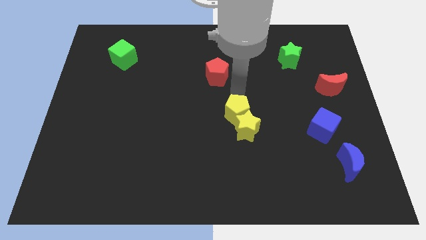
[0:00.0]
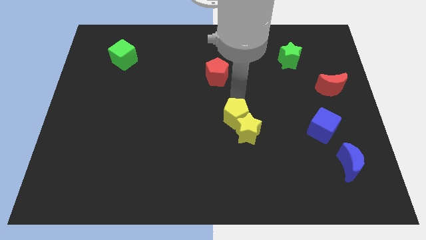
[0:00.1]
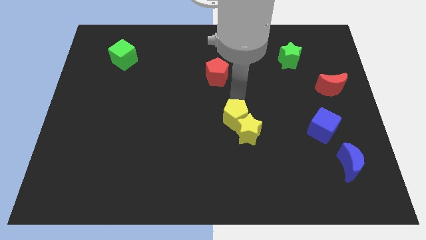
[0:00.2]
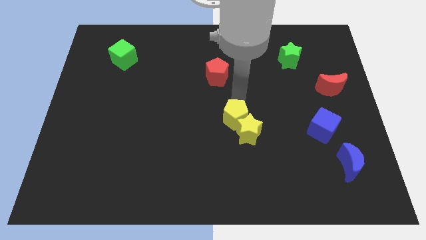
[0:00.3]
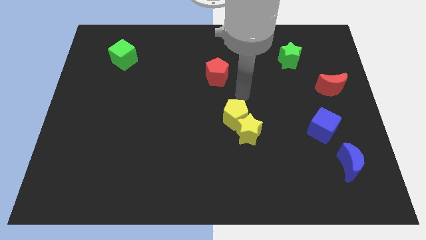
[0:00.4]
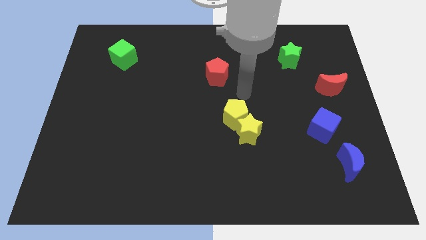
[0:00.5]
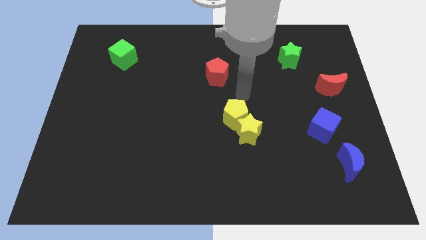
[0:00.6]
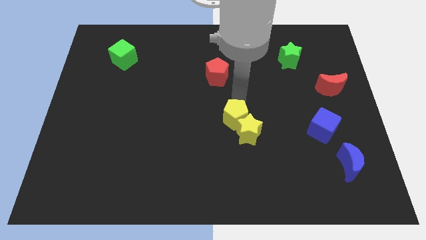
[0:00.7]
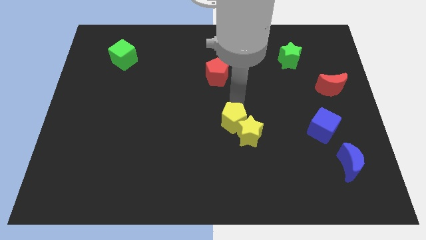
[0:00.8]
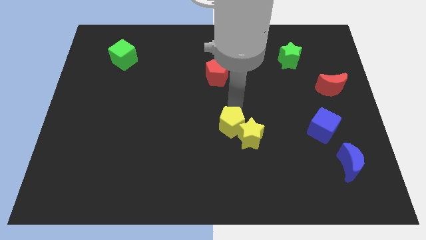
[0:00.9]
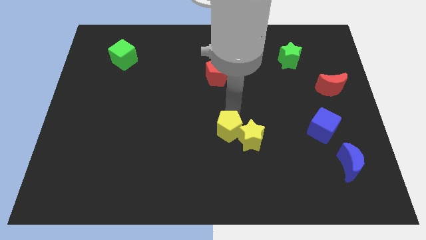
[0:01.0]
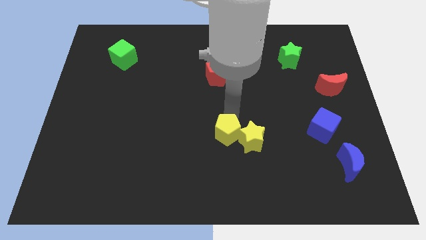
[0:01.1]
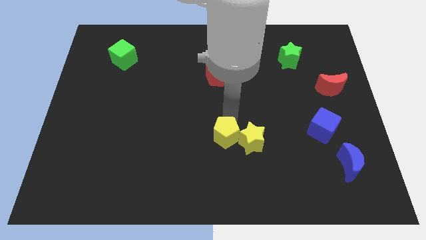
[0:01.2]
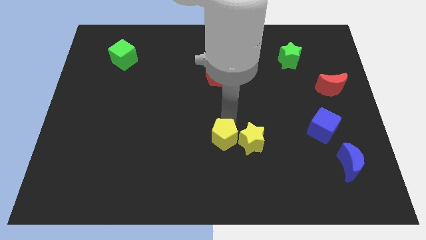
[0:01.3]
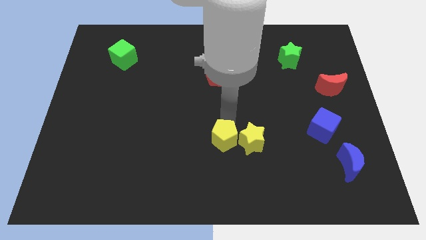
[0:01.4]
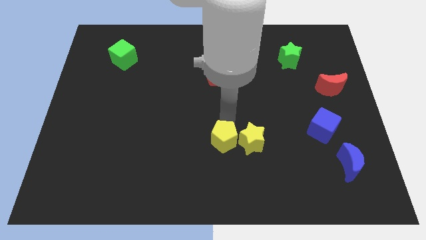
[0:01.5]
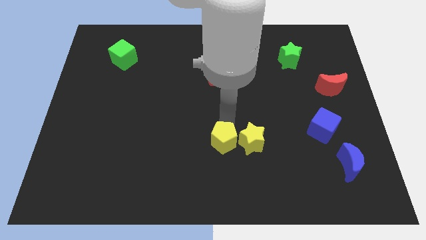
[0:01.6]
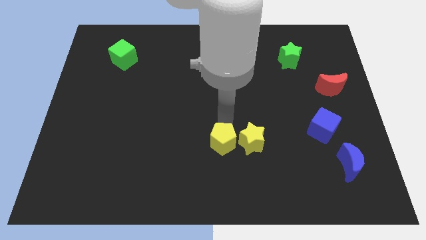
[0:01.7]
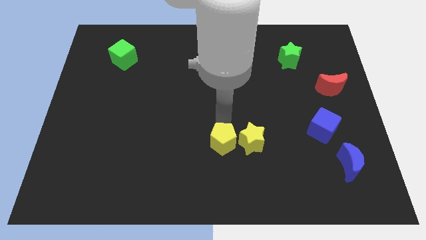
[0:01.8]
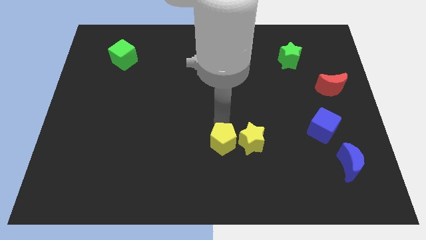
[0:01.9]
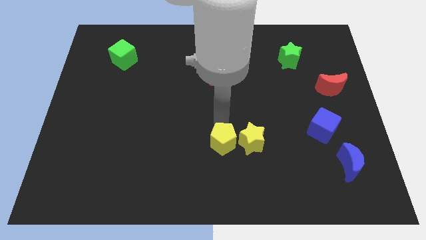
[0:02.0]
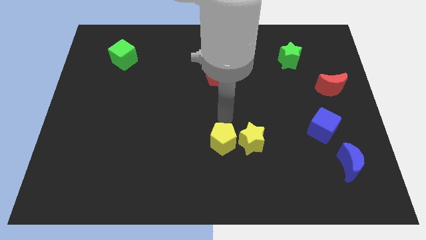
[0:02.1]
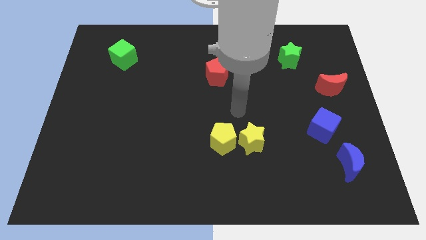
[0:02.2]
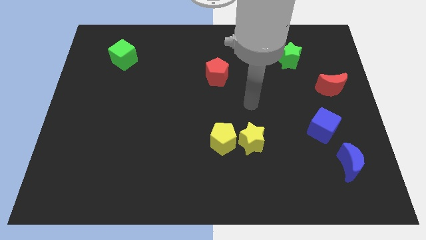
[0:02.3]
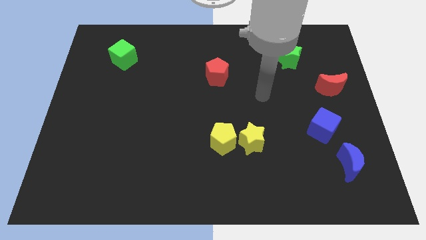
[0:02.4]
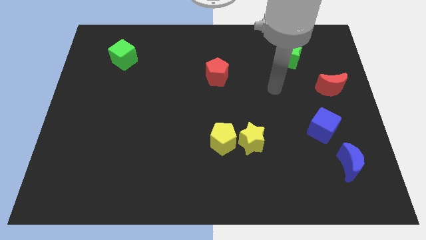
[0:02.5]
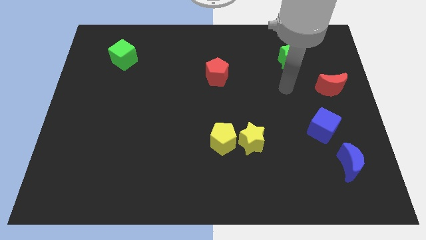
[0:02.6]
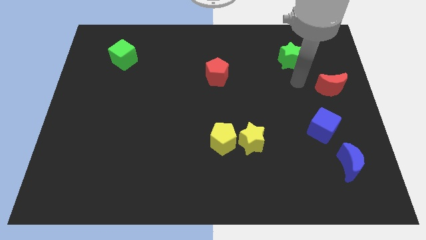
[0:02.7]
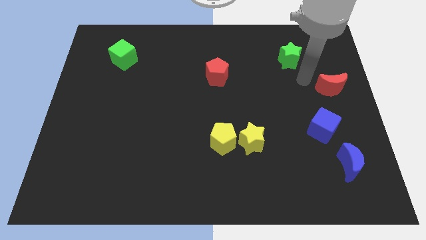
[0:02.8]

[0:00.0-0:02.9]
push the yellow pentagon to the left of the yellow star

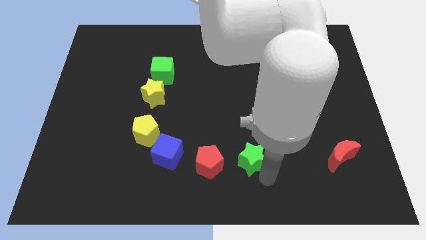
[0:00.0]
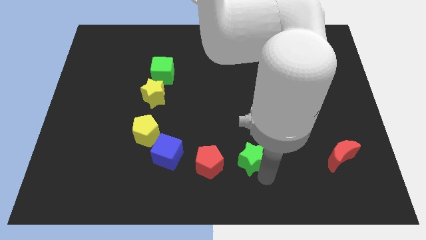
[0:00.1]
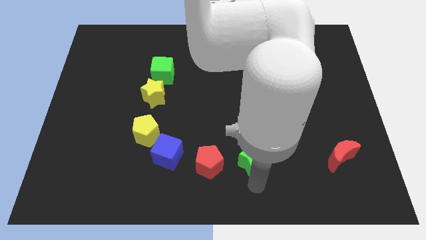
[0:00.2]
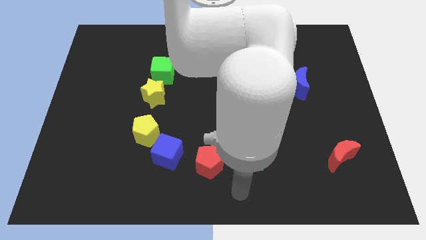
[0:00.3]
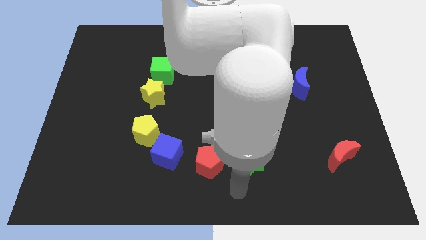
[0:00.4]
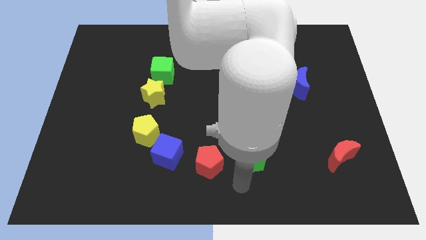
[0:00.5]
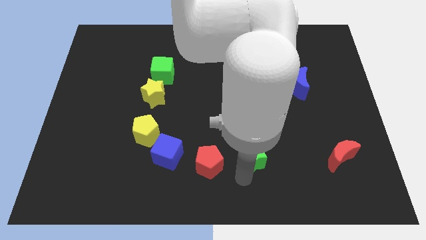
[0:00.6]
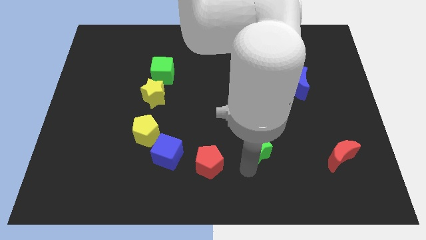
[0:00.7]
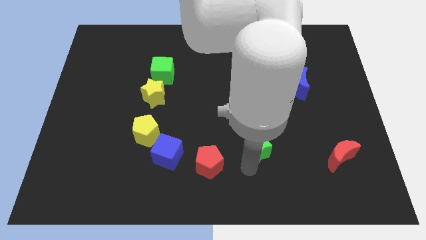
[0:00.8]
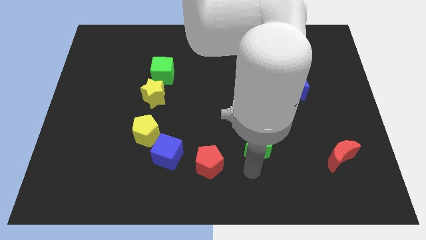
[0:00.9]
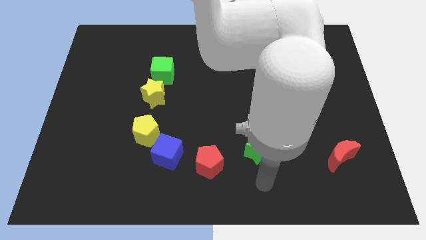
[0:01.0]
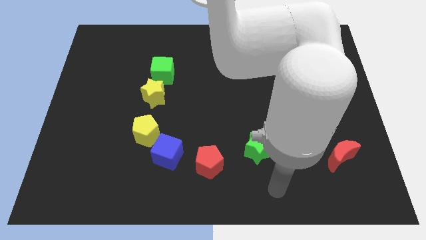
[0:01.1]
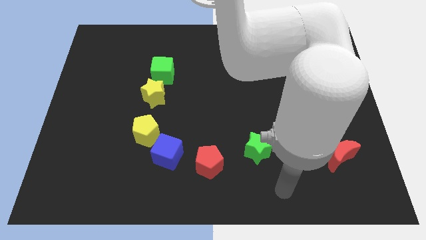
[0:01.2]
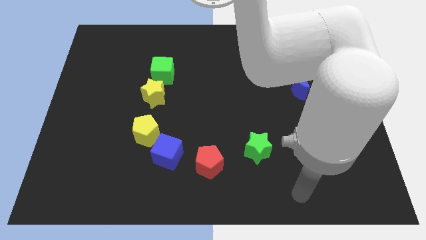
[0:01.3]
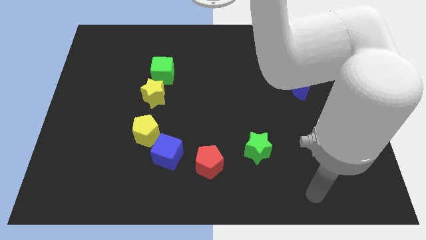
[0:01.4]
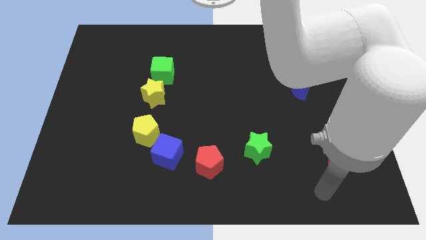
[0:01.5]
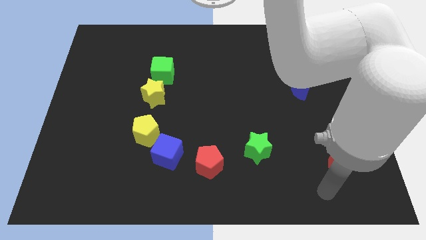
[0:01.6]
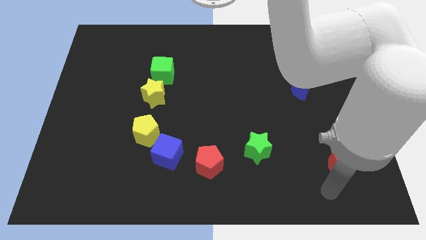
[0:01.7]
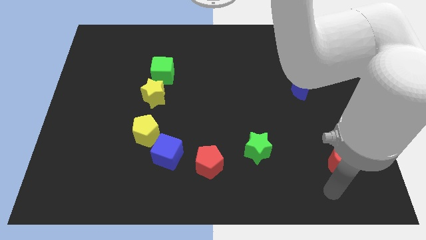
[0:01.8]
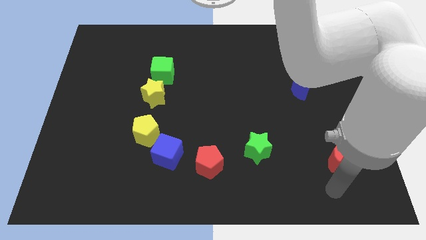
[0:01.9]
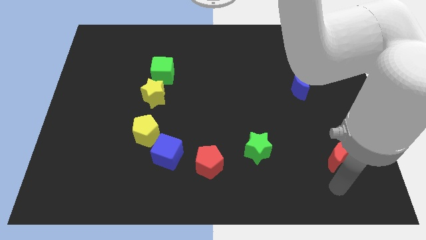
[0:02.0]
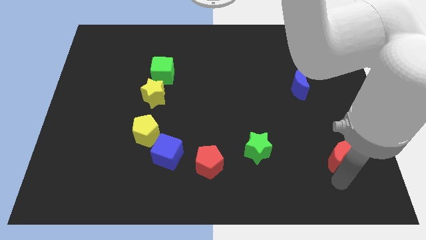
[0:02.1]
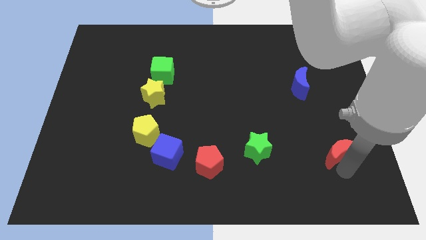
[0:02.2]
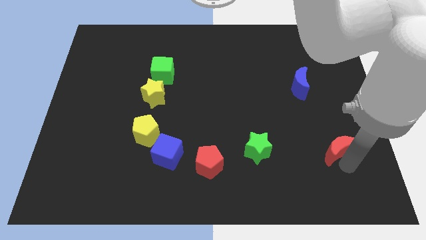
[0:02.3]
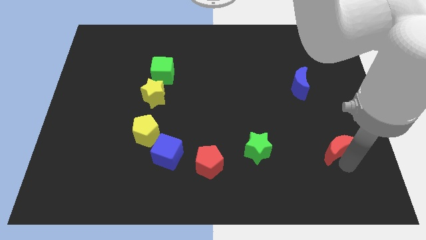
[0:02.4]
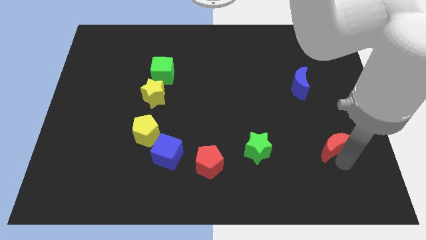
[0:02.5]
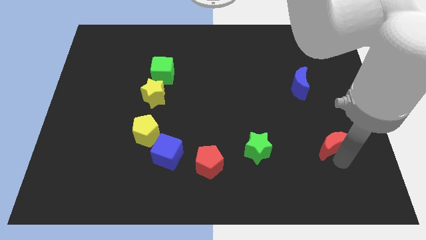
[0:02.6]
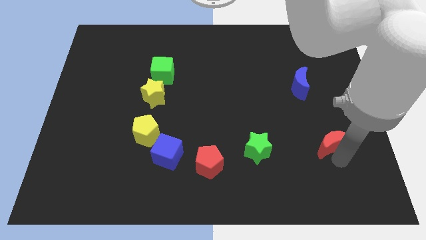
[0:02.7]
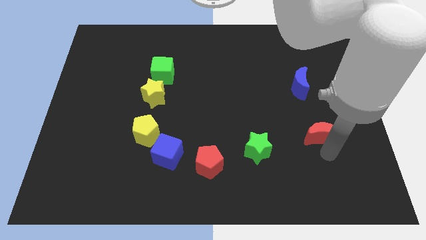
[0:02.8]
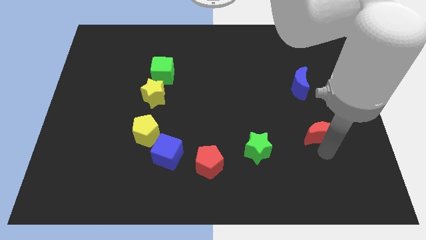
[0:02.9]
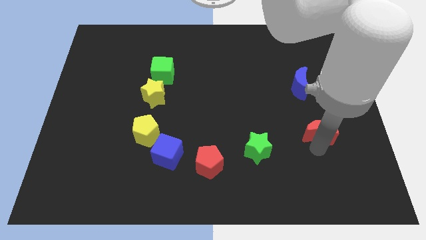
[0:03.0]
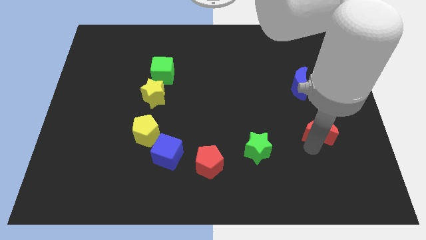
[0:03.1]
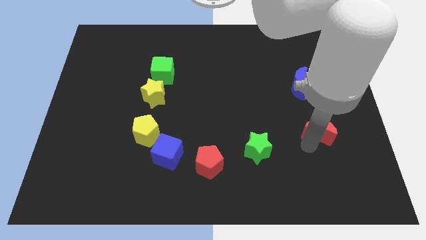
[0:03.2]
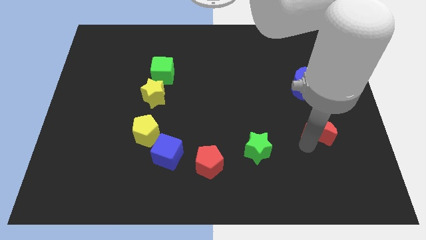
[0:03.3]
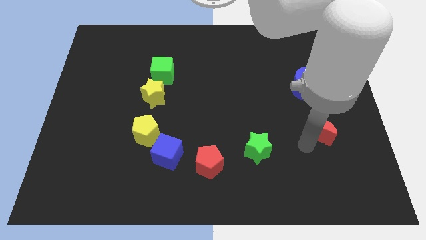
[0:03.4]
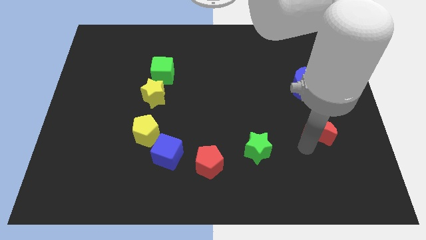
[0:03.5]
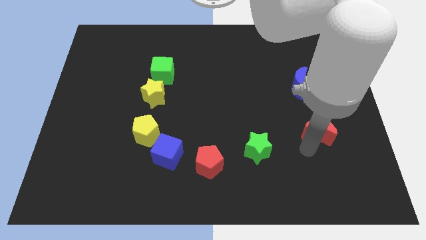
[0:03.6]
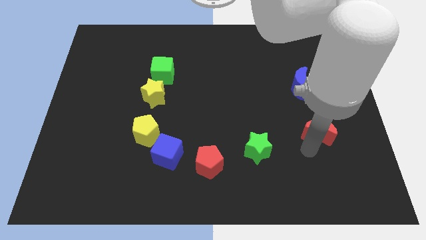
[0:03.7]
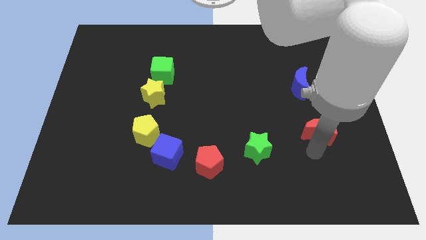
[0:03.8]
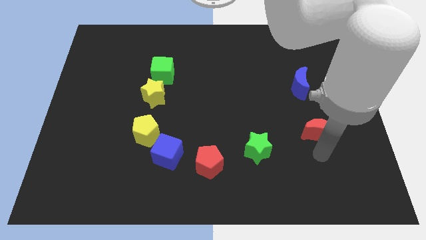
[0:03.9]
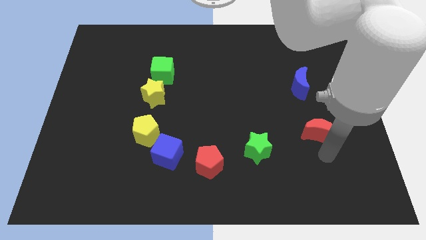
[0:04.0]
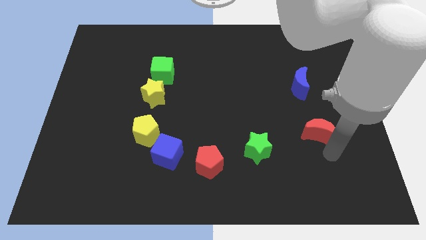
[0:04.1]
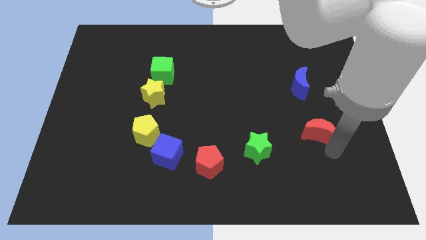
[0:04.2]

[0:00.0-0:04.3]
drag green star and red moon slightly to the top side of the board

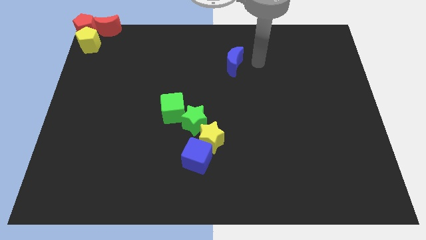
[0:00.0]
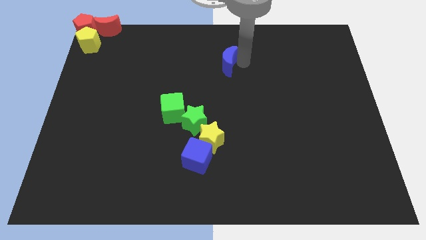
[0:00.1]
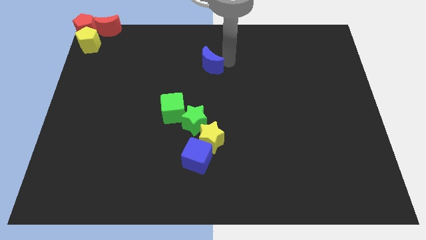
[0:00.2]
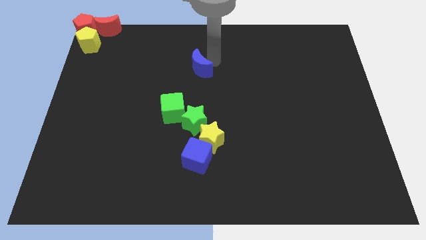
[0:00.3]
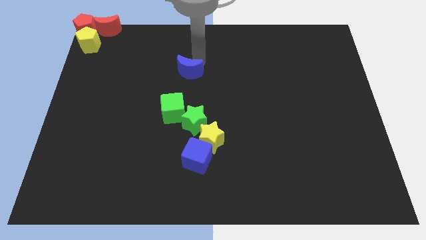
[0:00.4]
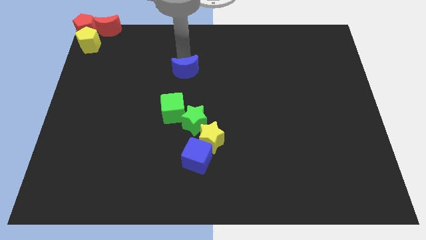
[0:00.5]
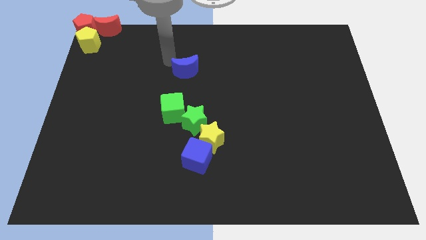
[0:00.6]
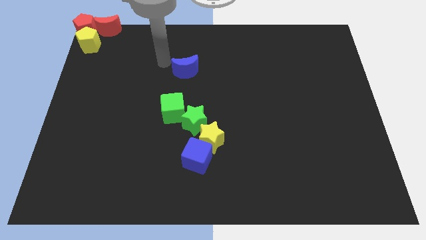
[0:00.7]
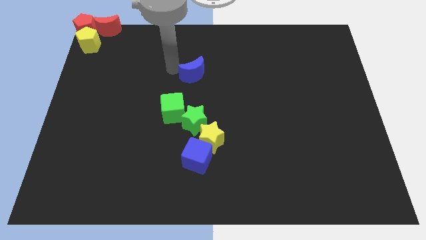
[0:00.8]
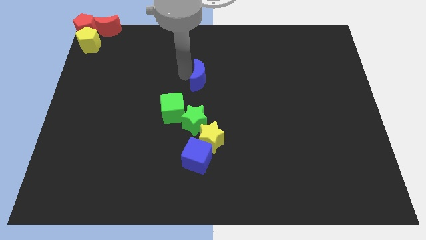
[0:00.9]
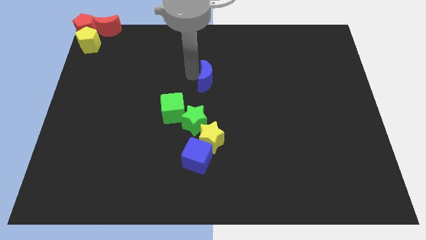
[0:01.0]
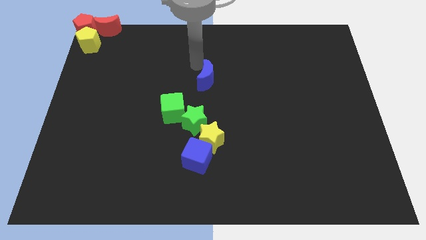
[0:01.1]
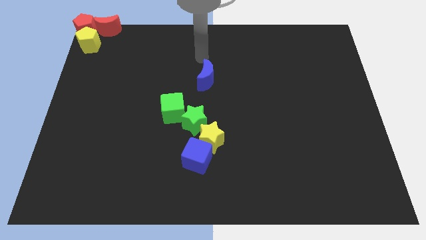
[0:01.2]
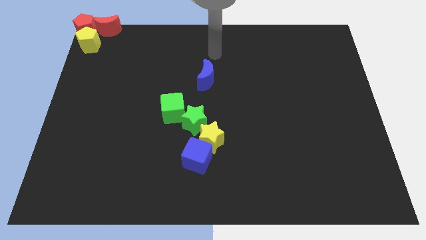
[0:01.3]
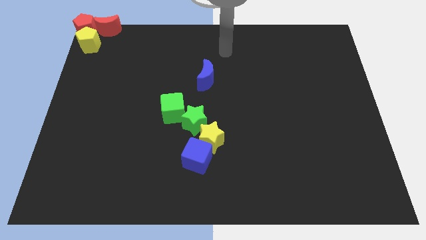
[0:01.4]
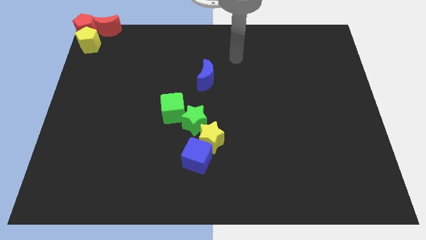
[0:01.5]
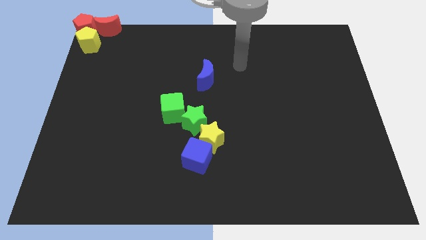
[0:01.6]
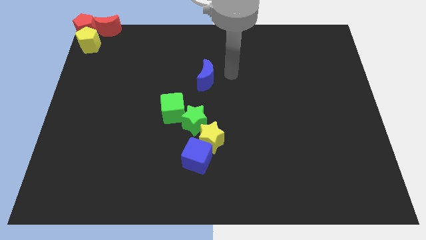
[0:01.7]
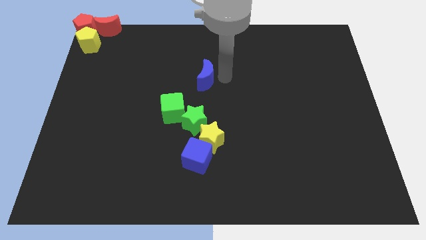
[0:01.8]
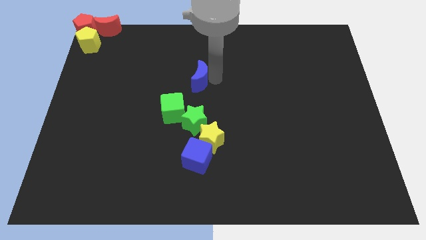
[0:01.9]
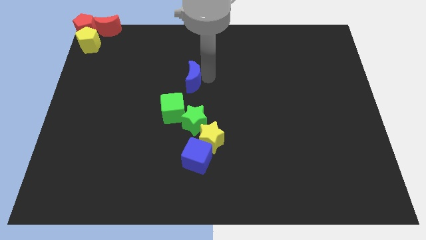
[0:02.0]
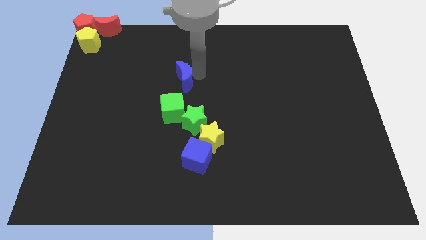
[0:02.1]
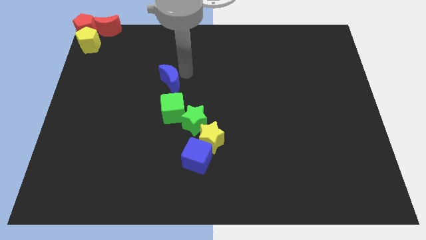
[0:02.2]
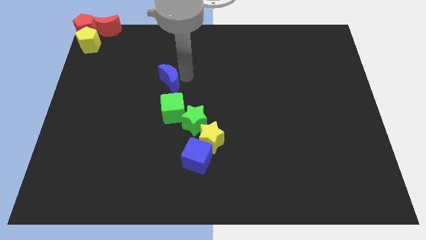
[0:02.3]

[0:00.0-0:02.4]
place the blue moon above the green cube
